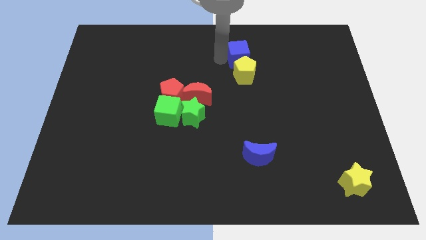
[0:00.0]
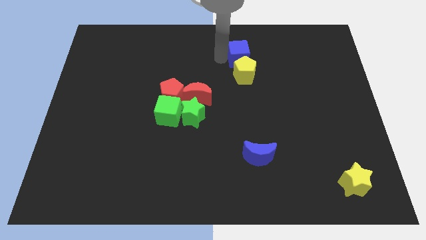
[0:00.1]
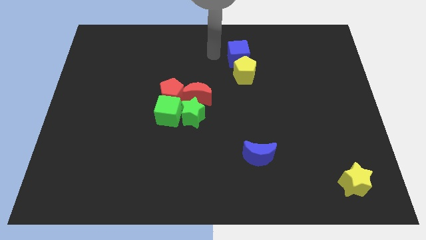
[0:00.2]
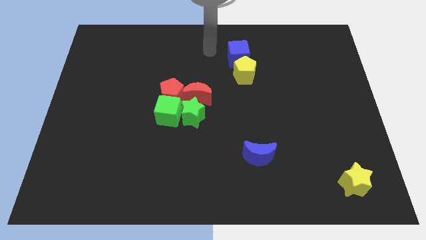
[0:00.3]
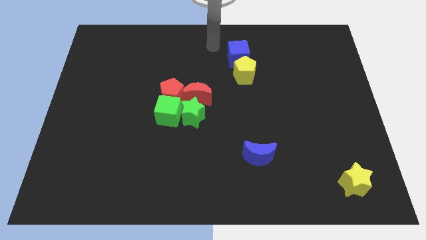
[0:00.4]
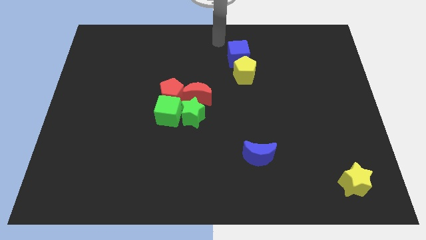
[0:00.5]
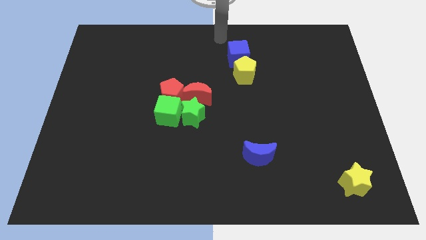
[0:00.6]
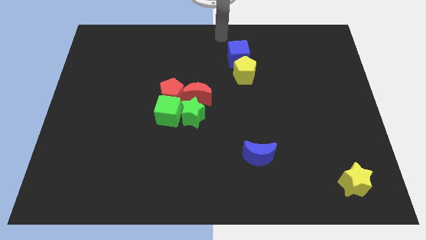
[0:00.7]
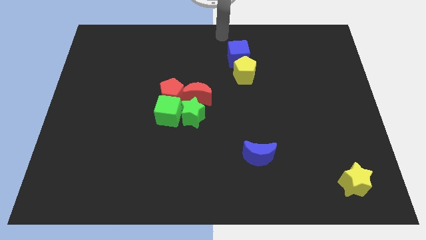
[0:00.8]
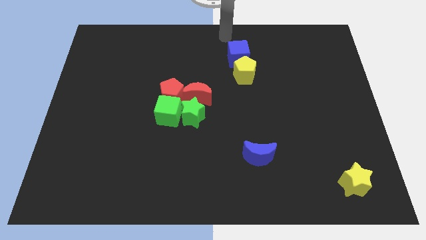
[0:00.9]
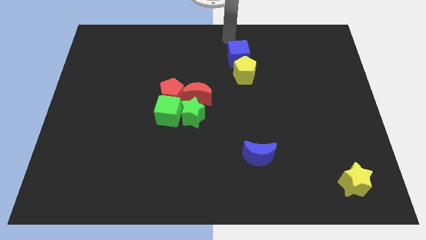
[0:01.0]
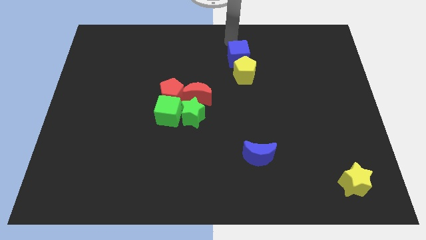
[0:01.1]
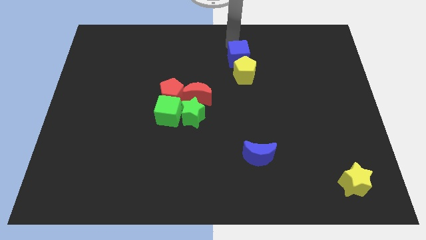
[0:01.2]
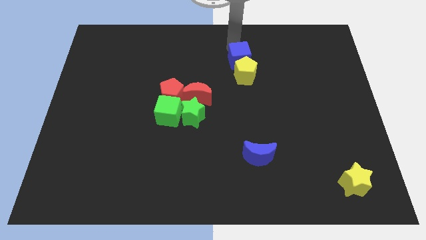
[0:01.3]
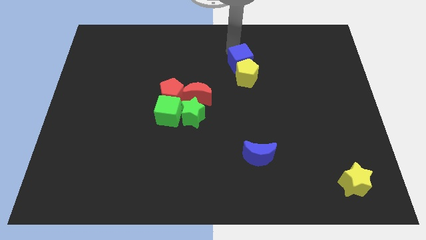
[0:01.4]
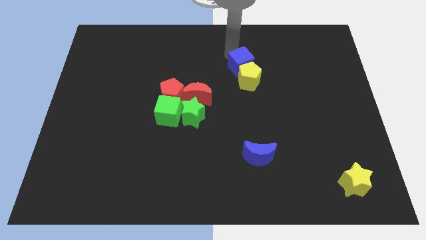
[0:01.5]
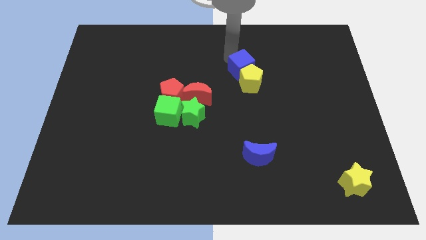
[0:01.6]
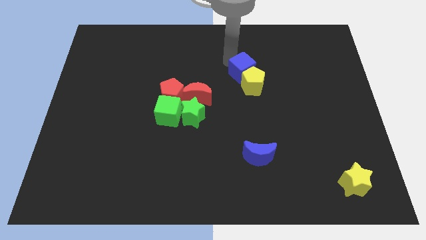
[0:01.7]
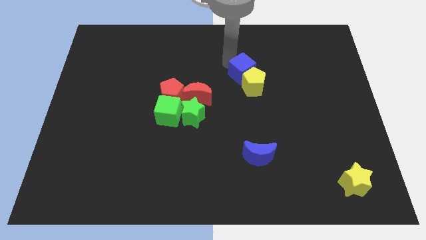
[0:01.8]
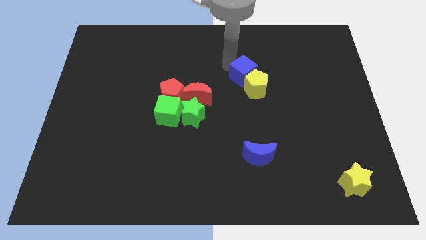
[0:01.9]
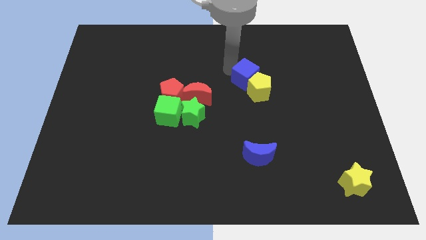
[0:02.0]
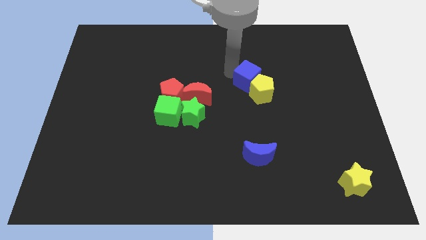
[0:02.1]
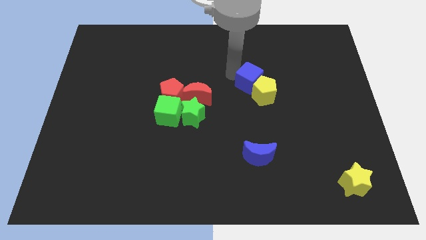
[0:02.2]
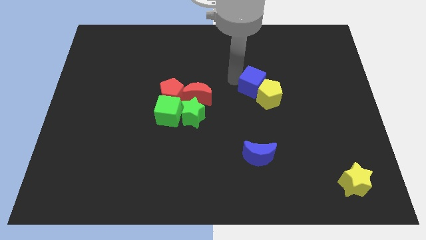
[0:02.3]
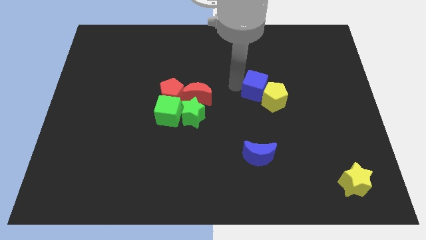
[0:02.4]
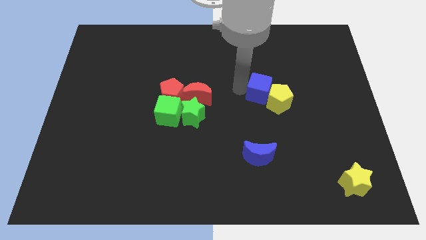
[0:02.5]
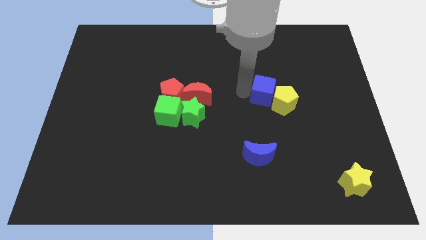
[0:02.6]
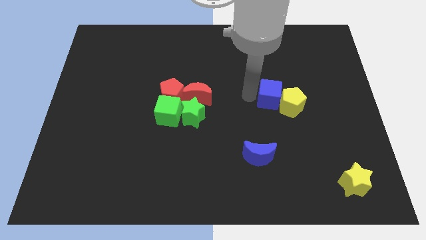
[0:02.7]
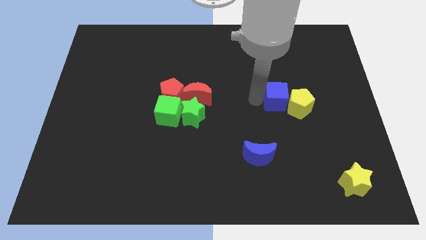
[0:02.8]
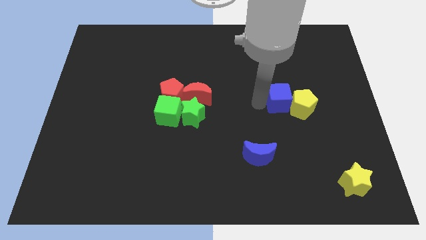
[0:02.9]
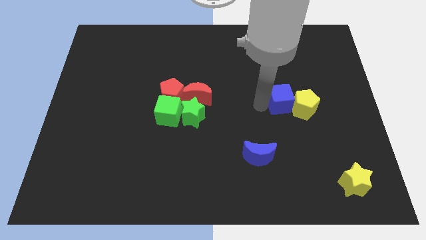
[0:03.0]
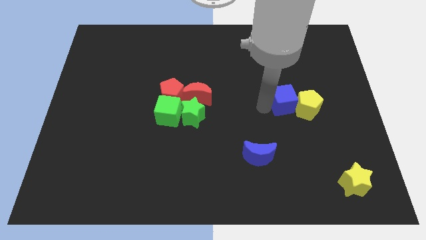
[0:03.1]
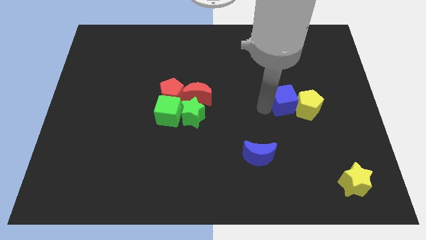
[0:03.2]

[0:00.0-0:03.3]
push blue cube along with yellow pentagon to the right center

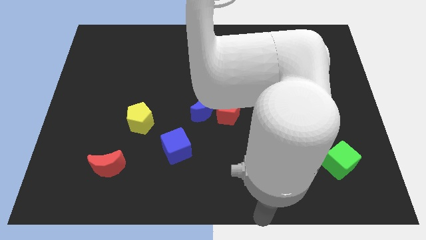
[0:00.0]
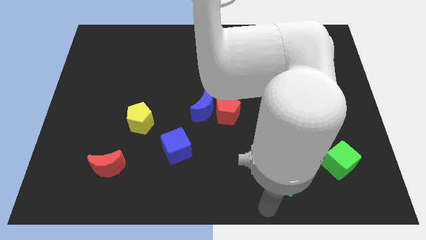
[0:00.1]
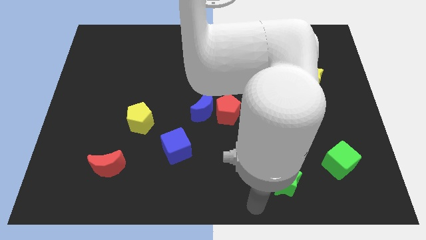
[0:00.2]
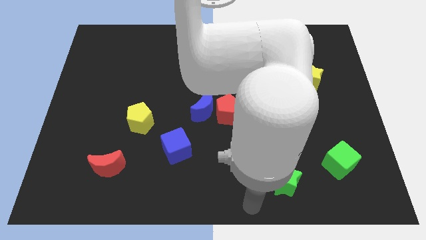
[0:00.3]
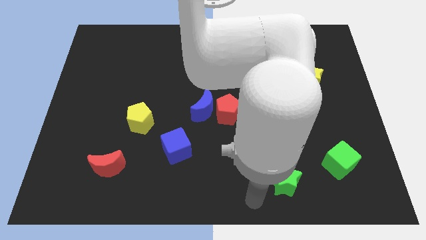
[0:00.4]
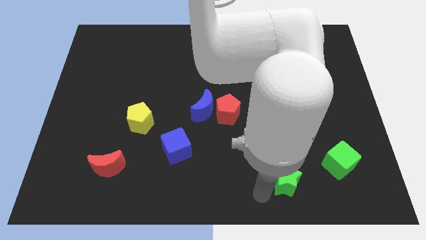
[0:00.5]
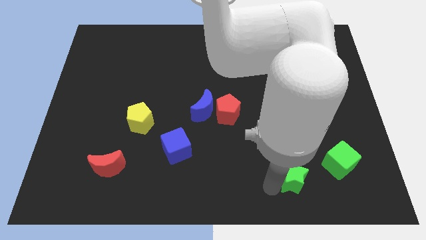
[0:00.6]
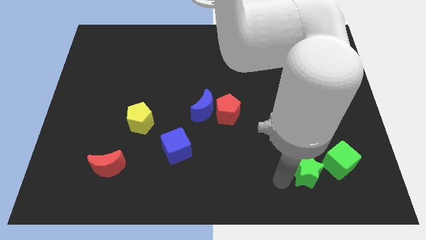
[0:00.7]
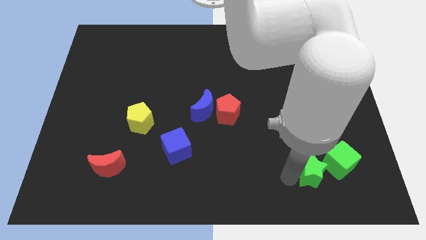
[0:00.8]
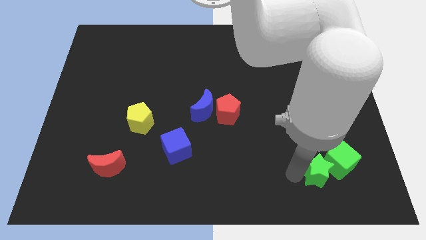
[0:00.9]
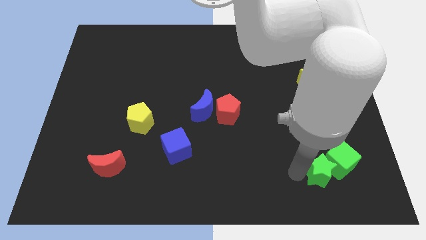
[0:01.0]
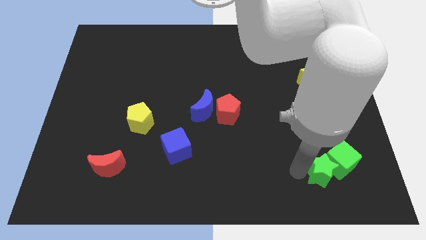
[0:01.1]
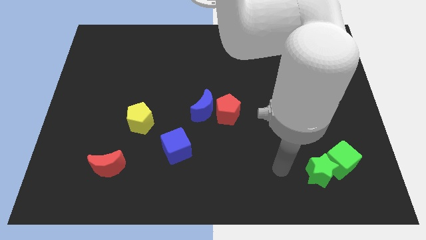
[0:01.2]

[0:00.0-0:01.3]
move green star into green cube

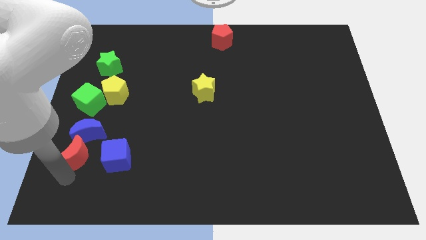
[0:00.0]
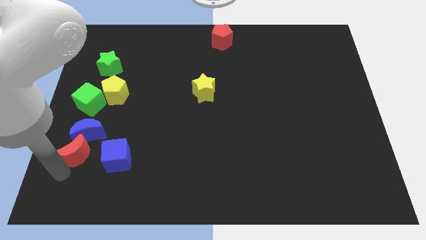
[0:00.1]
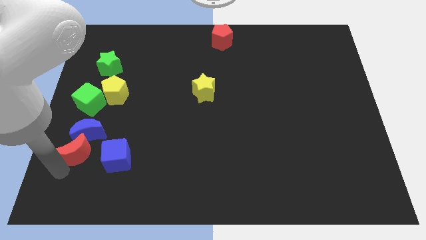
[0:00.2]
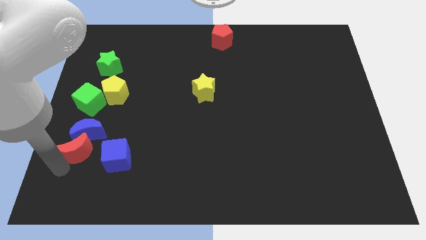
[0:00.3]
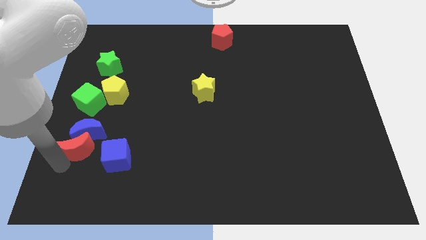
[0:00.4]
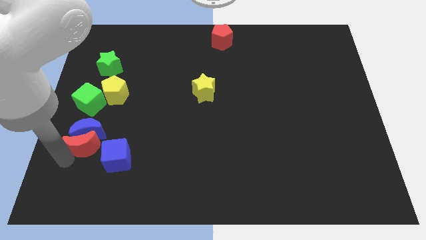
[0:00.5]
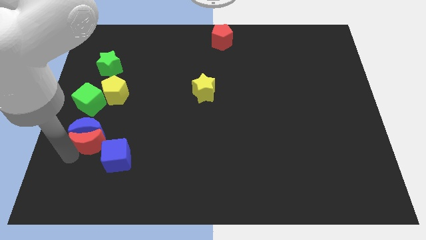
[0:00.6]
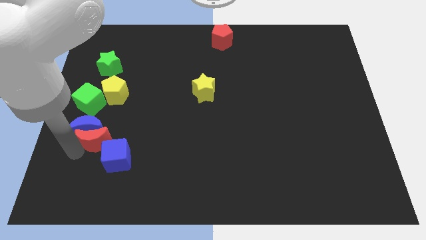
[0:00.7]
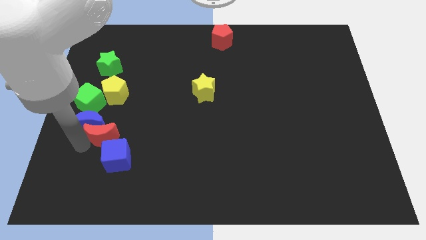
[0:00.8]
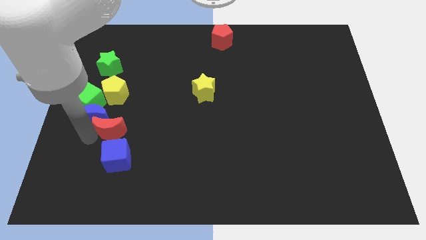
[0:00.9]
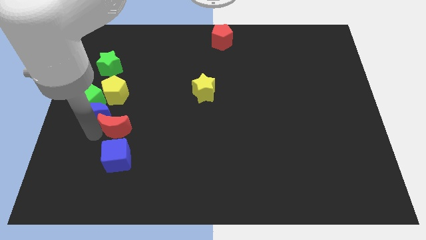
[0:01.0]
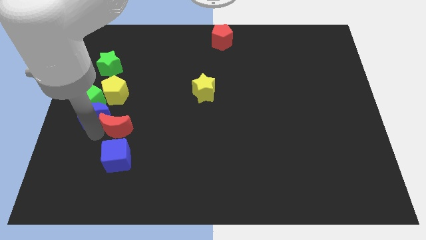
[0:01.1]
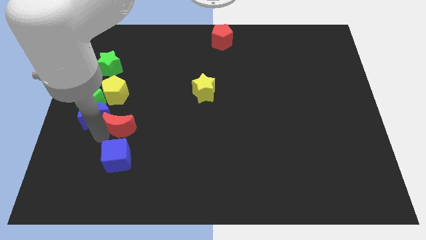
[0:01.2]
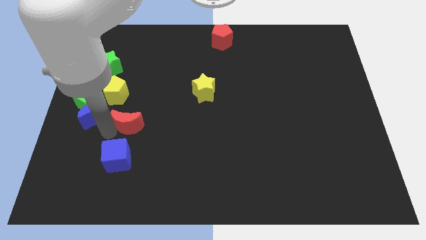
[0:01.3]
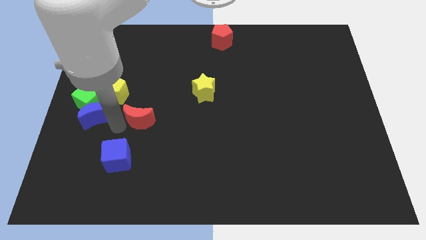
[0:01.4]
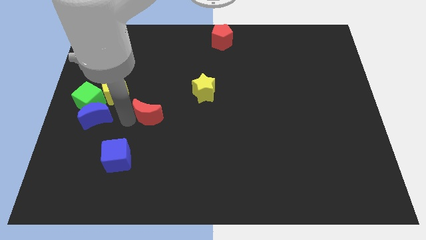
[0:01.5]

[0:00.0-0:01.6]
push the red crescent to the left of the blue crescent

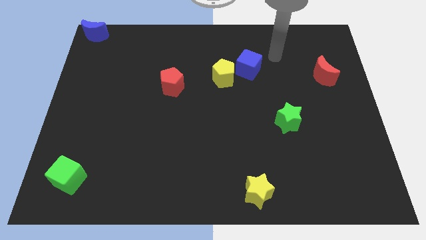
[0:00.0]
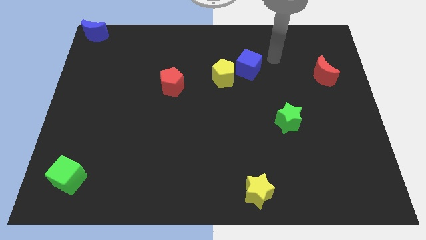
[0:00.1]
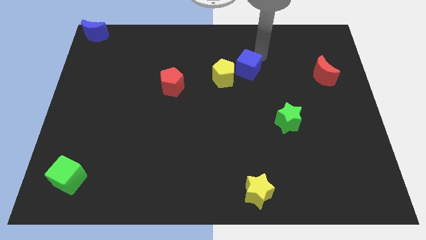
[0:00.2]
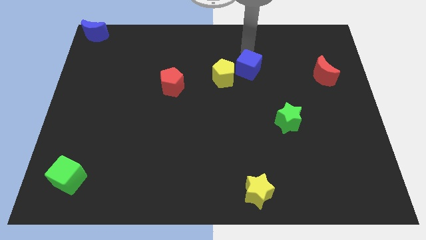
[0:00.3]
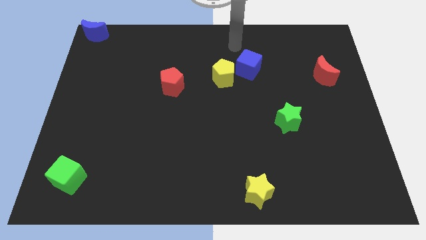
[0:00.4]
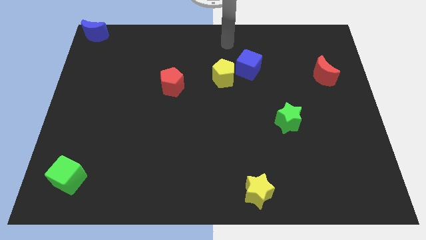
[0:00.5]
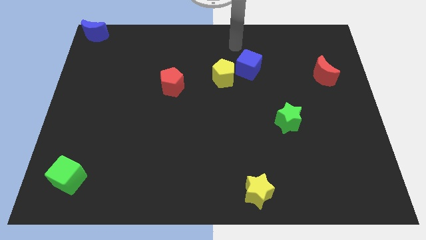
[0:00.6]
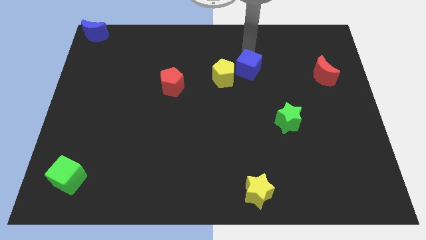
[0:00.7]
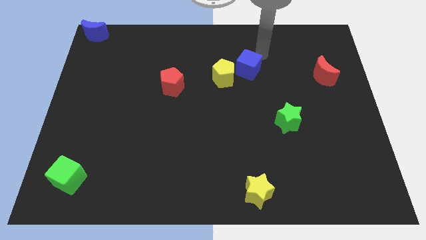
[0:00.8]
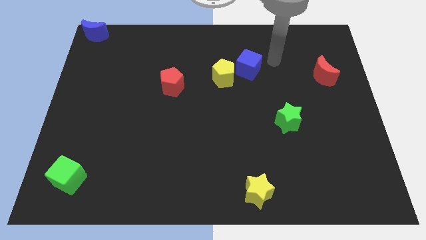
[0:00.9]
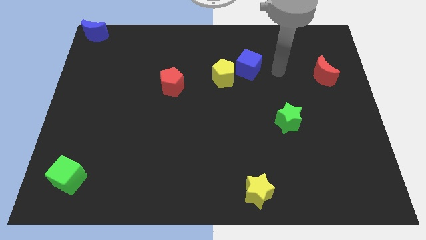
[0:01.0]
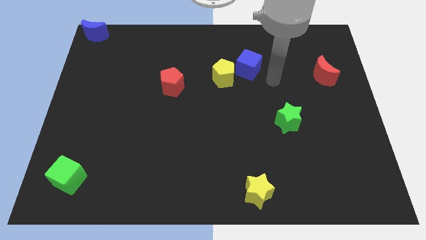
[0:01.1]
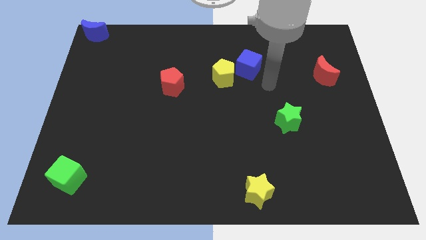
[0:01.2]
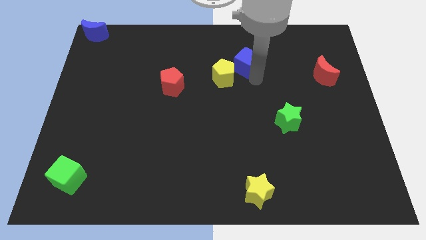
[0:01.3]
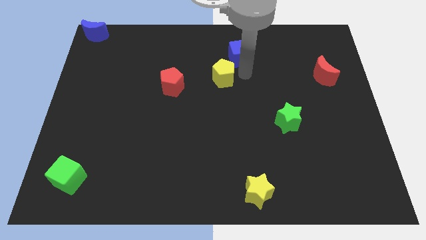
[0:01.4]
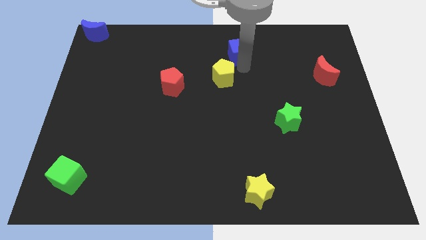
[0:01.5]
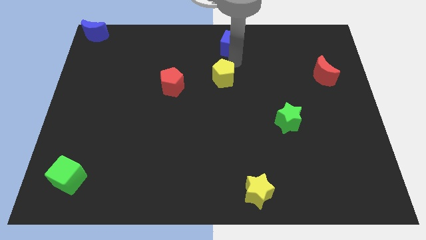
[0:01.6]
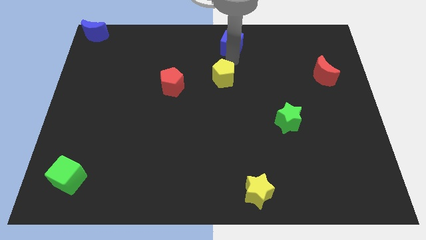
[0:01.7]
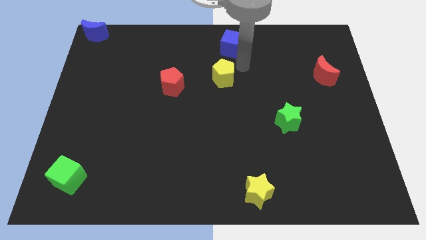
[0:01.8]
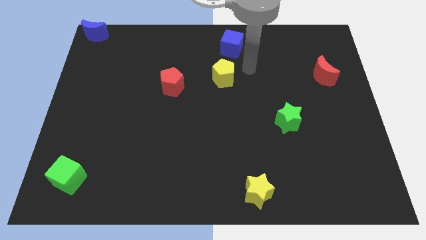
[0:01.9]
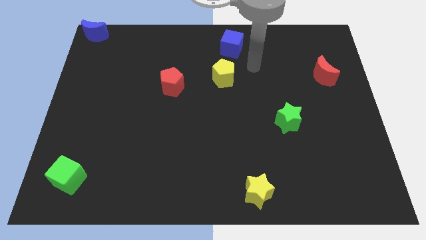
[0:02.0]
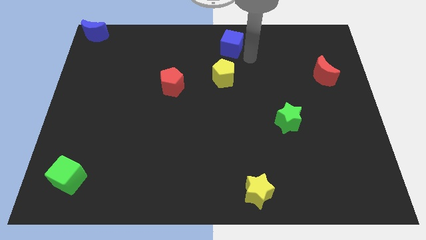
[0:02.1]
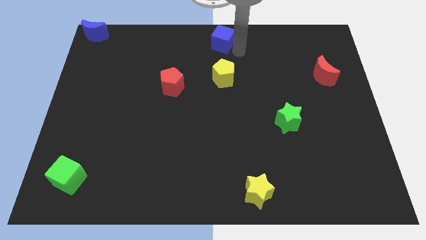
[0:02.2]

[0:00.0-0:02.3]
move the blue cube to the top of the yellow pentagon

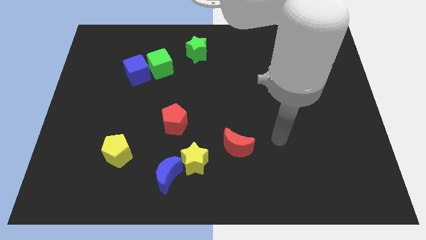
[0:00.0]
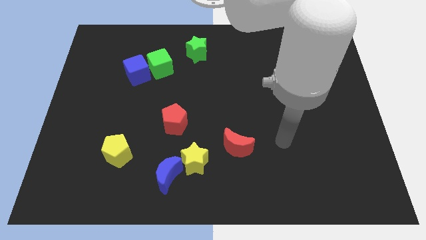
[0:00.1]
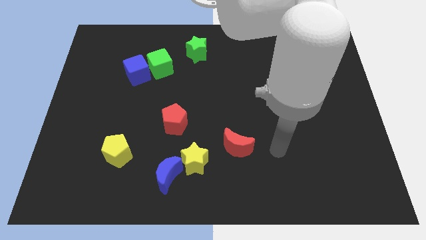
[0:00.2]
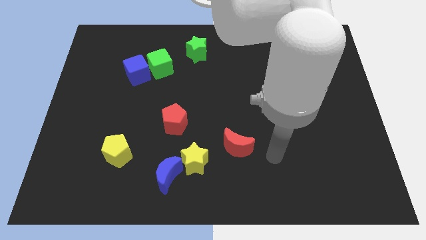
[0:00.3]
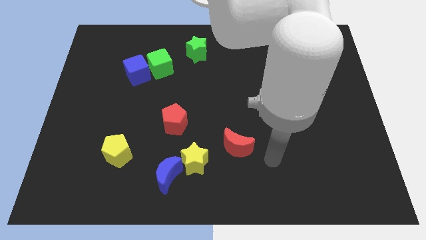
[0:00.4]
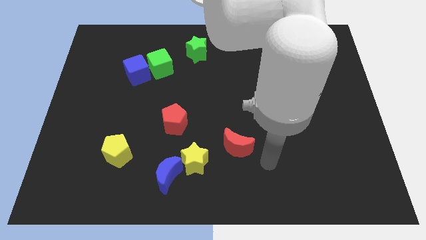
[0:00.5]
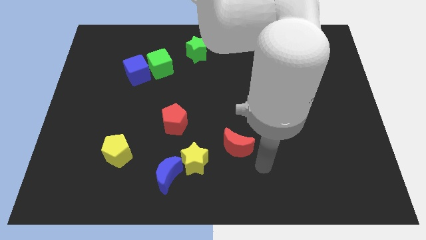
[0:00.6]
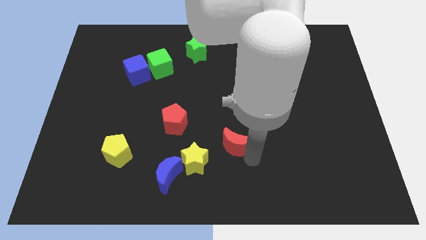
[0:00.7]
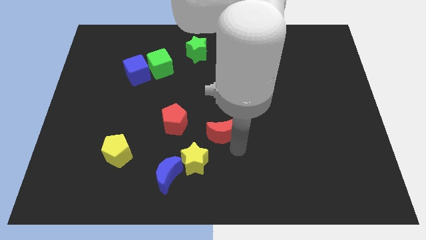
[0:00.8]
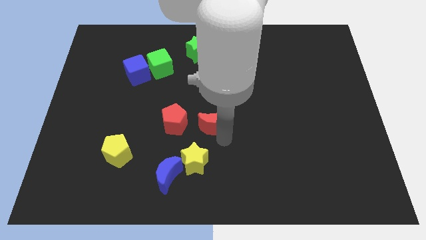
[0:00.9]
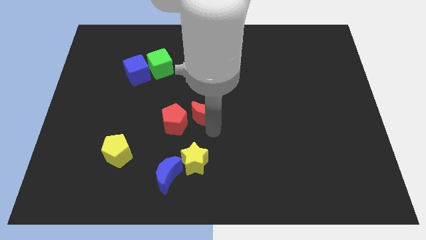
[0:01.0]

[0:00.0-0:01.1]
place the red moon right to the red pentagon
